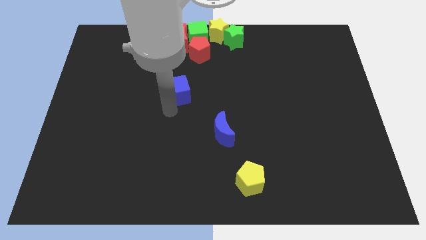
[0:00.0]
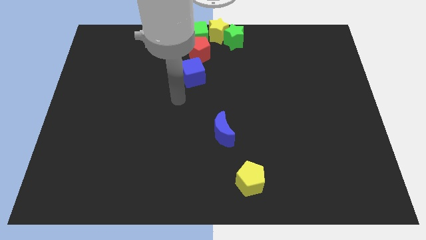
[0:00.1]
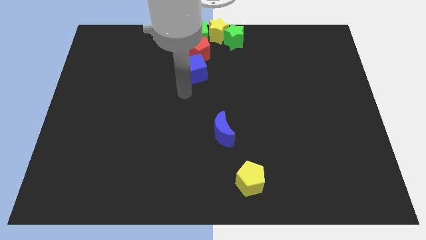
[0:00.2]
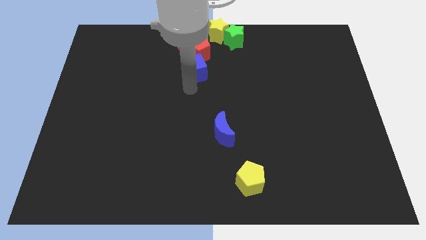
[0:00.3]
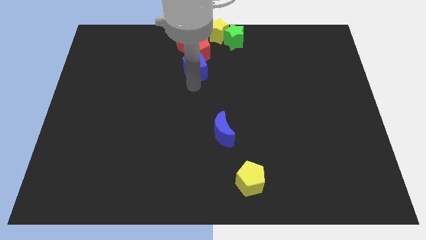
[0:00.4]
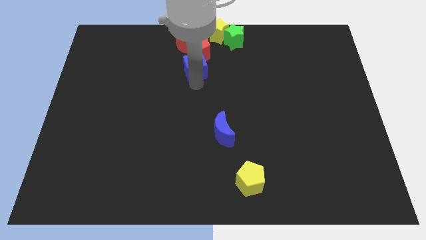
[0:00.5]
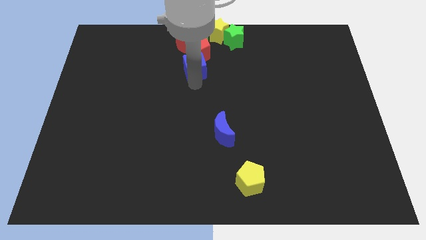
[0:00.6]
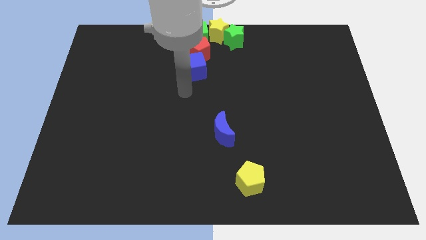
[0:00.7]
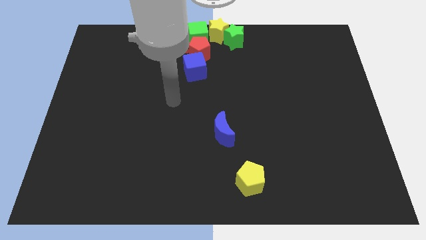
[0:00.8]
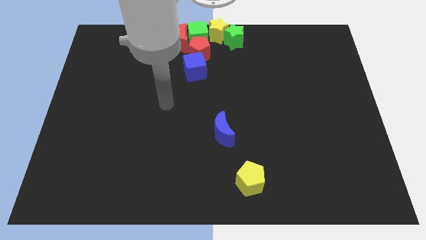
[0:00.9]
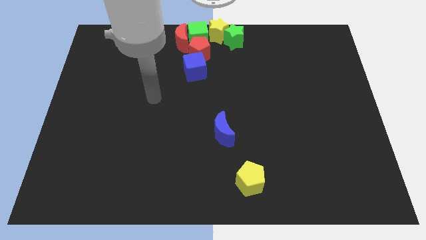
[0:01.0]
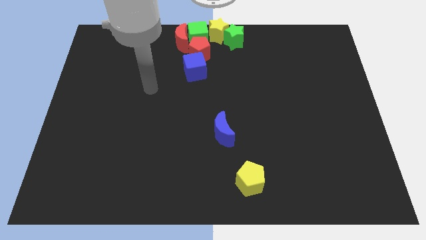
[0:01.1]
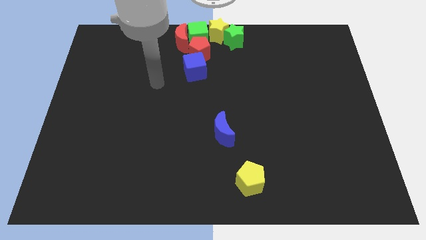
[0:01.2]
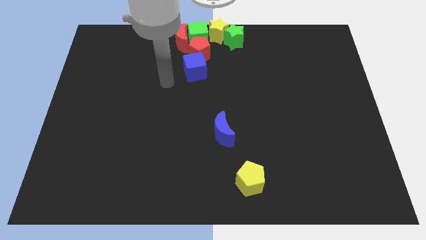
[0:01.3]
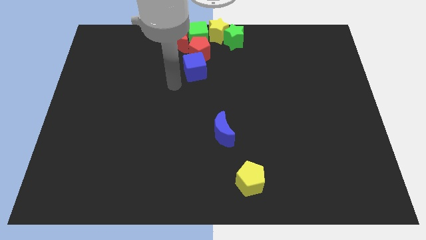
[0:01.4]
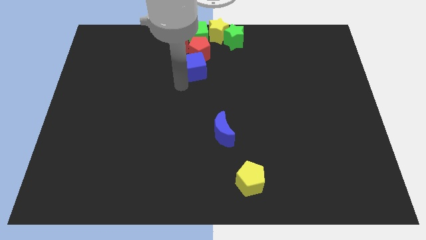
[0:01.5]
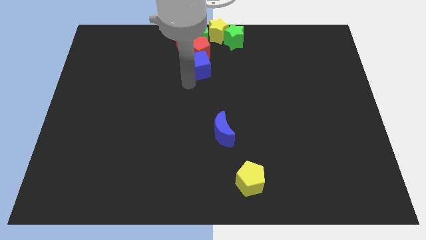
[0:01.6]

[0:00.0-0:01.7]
move the blue cube to the bottom side of the red pentagon

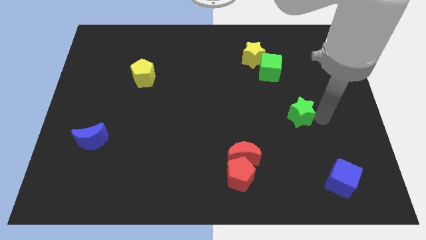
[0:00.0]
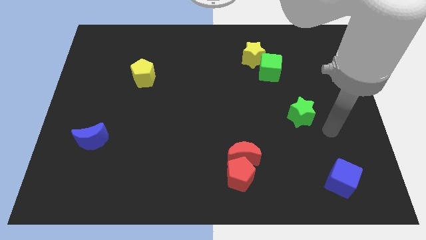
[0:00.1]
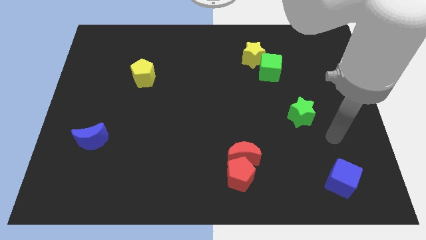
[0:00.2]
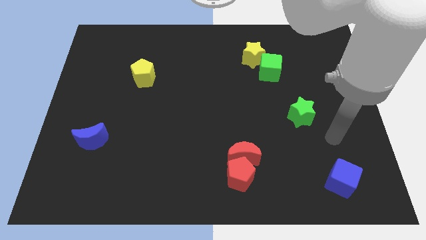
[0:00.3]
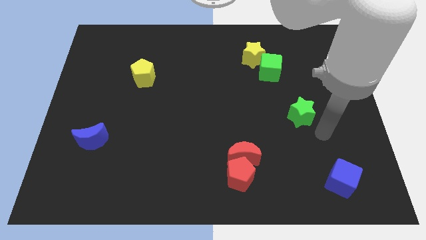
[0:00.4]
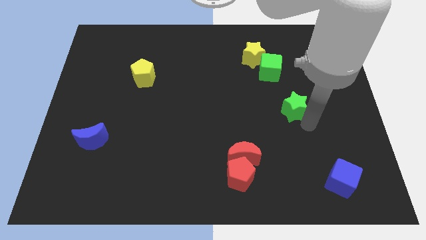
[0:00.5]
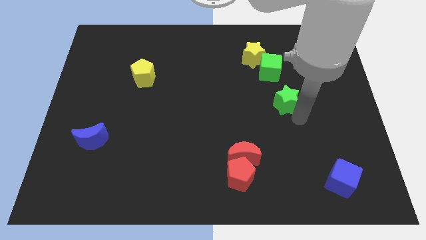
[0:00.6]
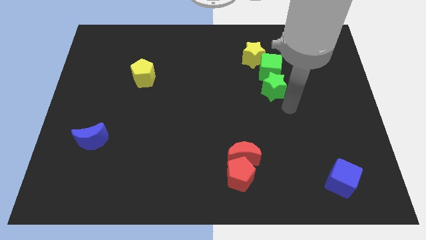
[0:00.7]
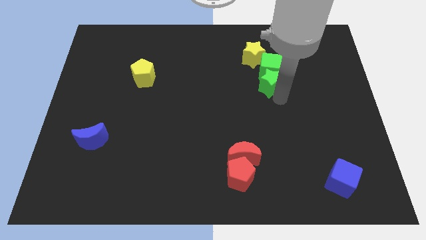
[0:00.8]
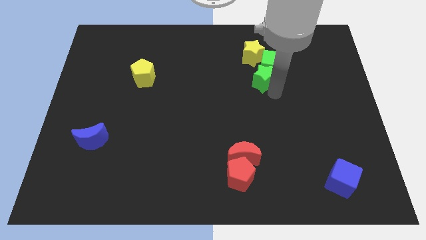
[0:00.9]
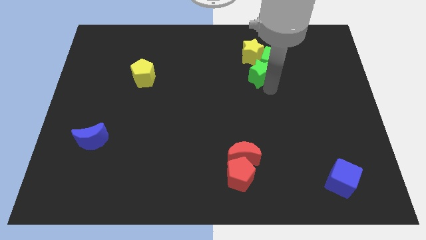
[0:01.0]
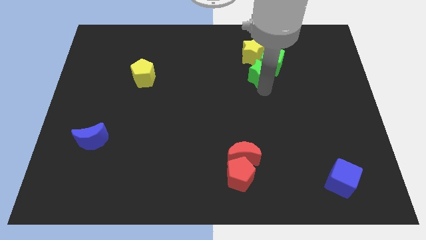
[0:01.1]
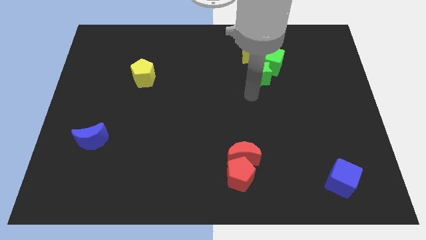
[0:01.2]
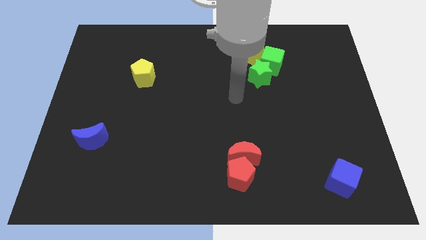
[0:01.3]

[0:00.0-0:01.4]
push the green star into the green cube and yellow star

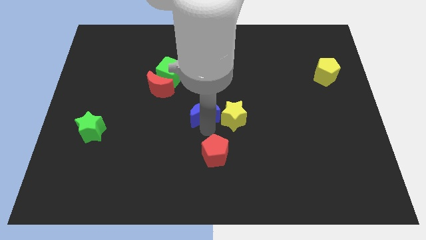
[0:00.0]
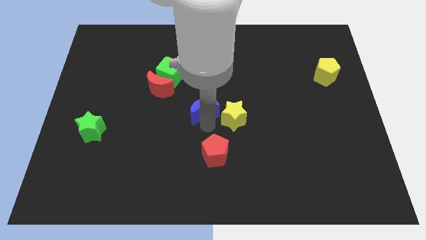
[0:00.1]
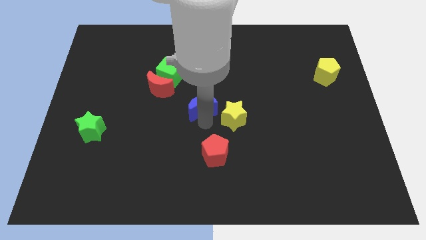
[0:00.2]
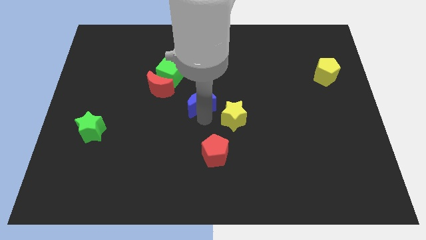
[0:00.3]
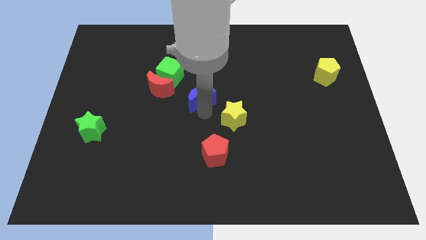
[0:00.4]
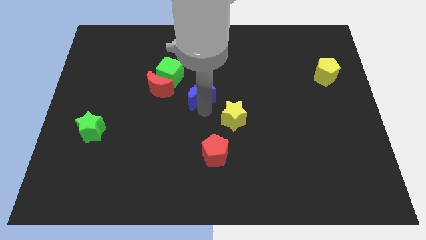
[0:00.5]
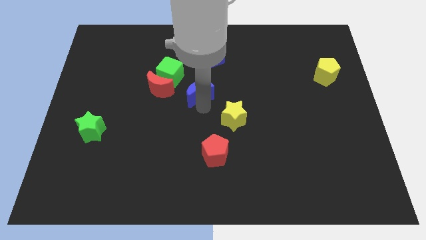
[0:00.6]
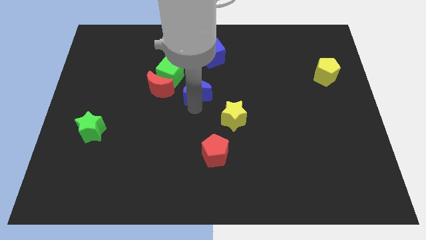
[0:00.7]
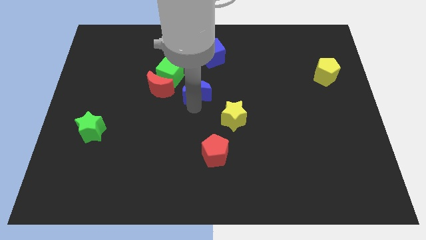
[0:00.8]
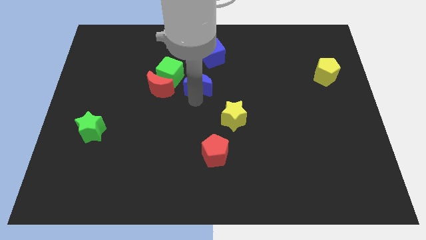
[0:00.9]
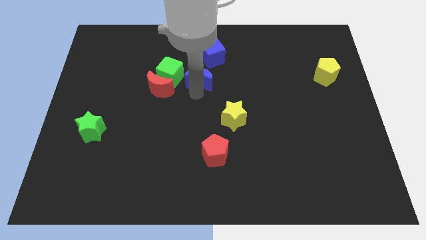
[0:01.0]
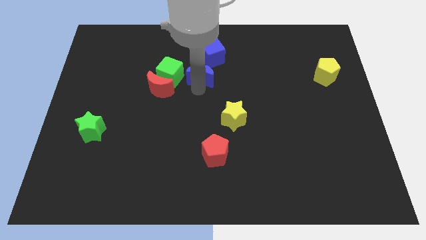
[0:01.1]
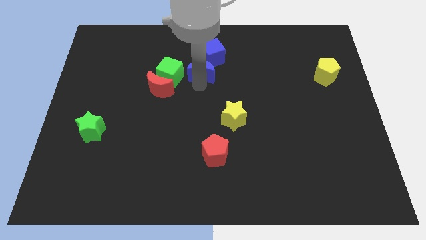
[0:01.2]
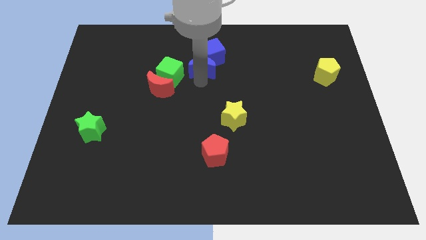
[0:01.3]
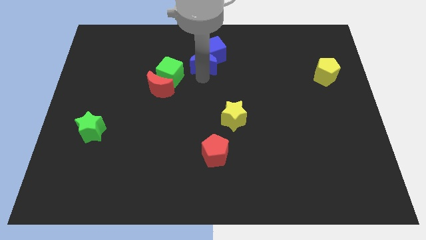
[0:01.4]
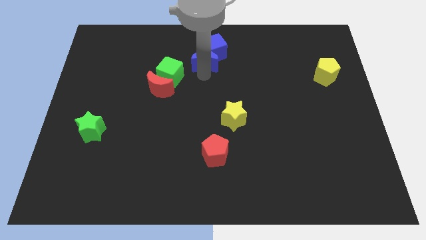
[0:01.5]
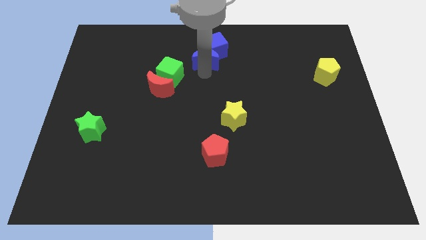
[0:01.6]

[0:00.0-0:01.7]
push the blue moon into the blue cube

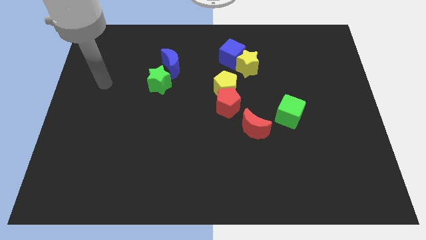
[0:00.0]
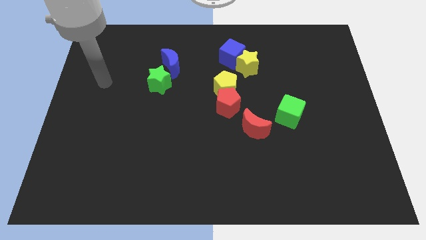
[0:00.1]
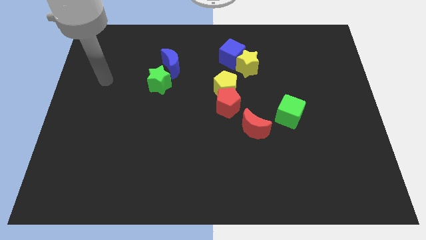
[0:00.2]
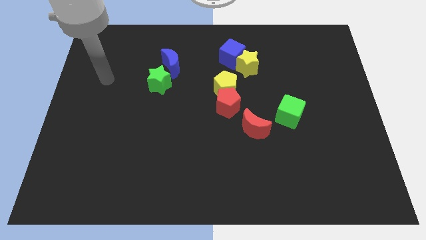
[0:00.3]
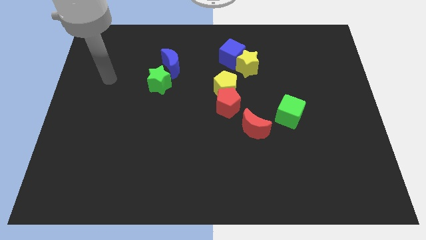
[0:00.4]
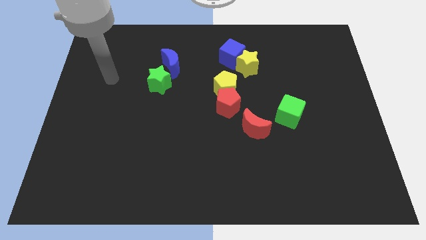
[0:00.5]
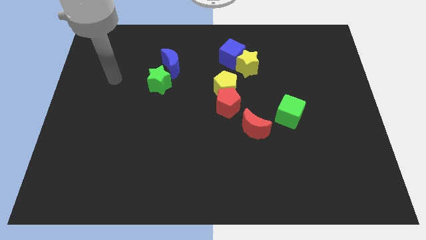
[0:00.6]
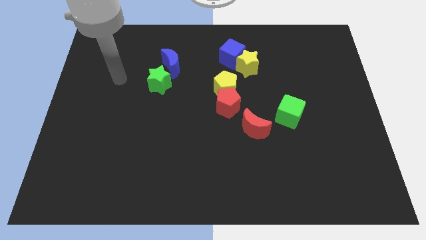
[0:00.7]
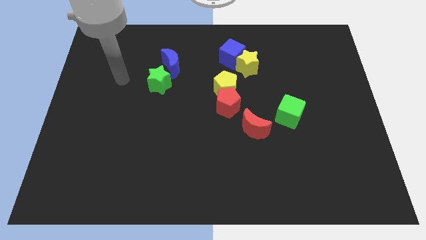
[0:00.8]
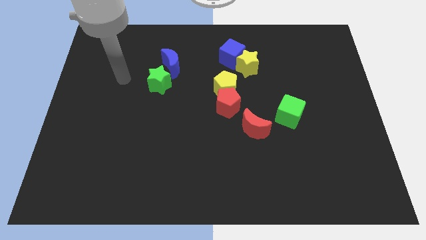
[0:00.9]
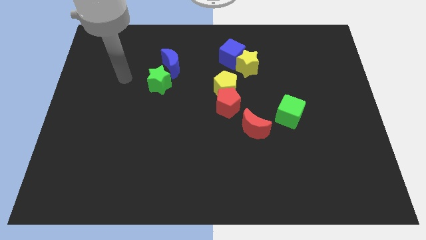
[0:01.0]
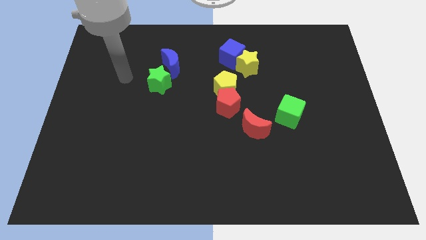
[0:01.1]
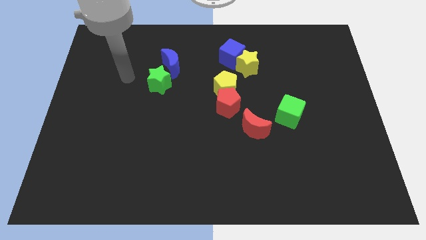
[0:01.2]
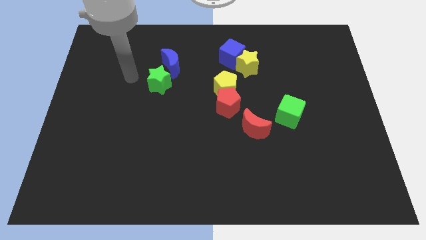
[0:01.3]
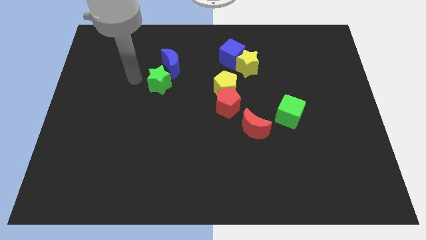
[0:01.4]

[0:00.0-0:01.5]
move your hand towards the left side of the green star

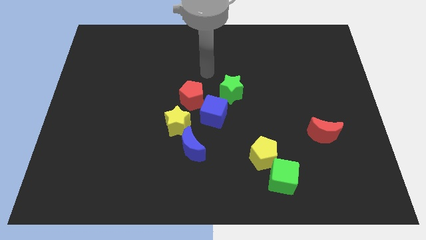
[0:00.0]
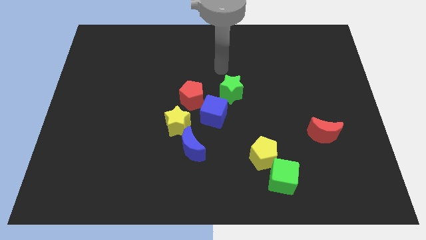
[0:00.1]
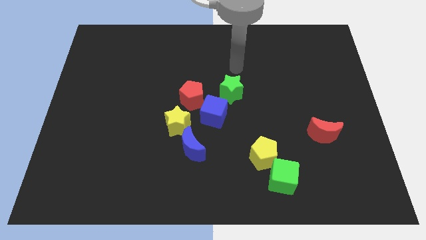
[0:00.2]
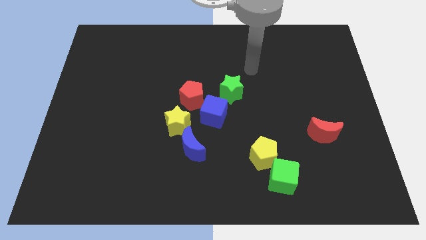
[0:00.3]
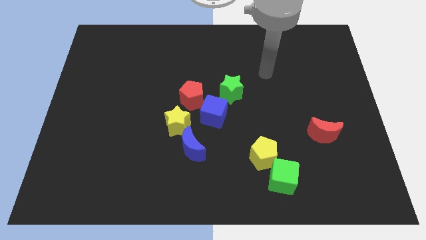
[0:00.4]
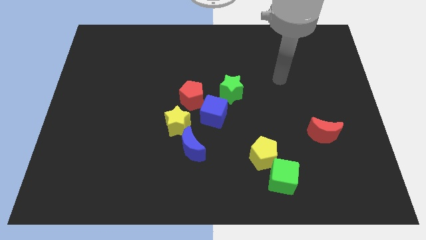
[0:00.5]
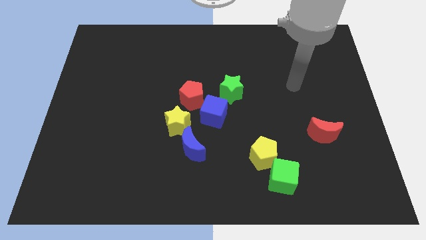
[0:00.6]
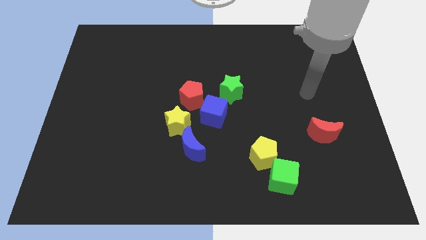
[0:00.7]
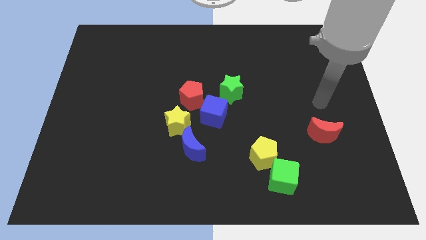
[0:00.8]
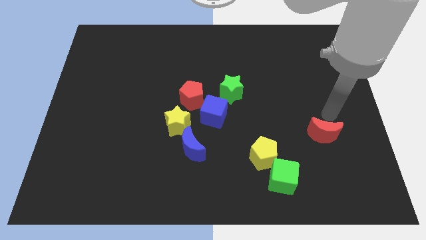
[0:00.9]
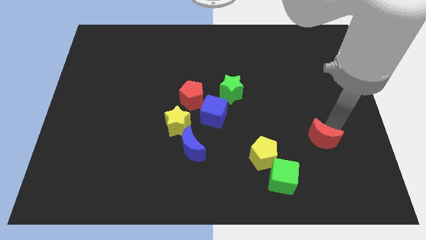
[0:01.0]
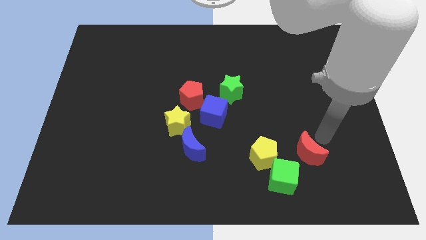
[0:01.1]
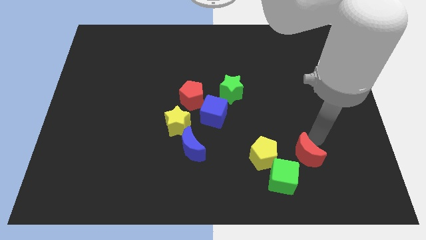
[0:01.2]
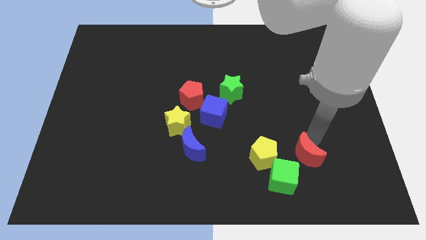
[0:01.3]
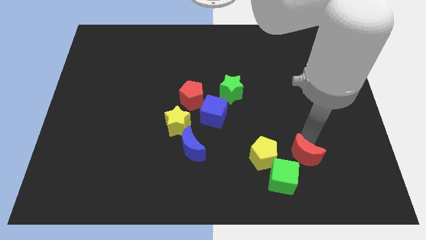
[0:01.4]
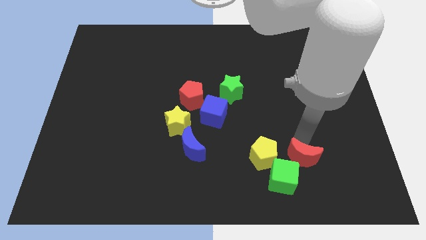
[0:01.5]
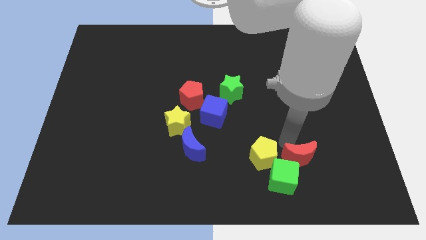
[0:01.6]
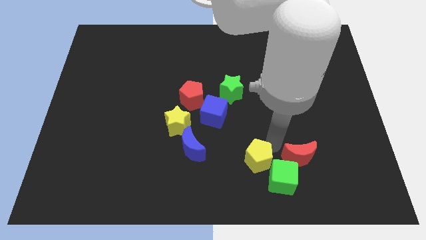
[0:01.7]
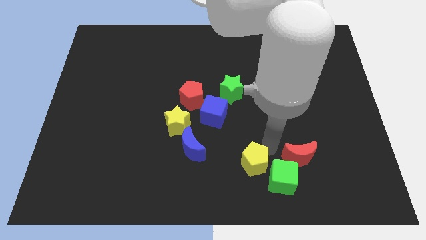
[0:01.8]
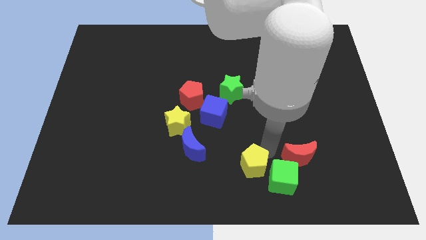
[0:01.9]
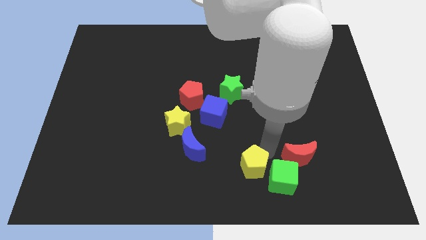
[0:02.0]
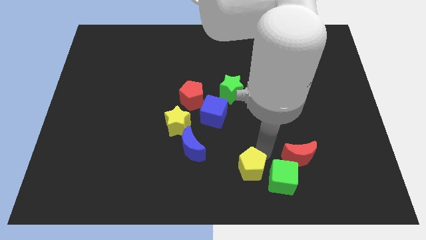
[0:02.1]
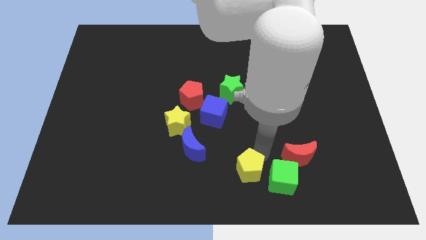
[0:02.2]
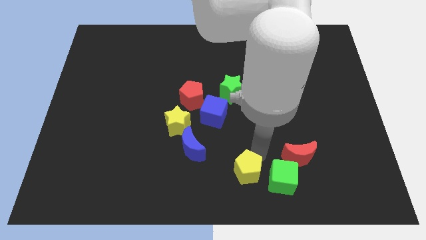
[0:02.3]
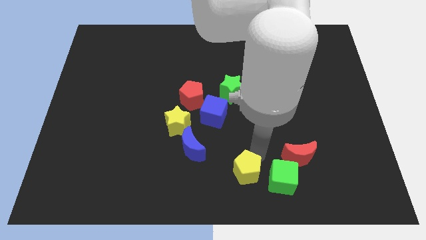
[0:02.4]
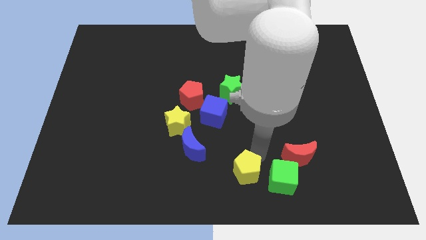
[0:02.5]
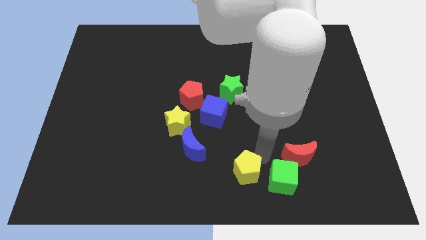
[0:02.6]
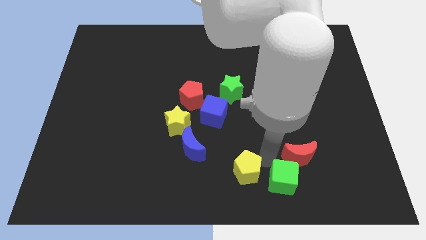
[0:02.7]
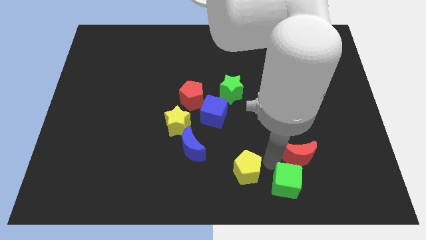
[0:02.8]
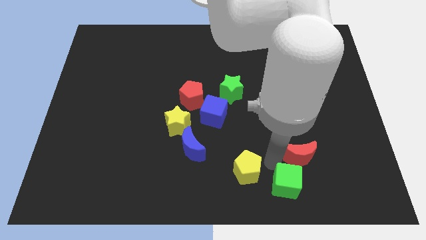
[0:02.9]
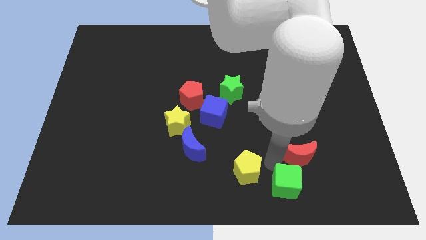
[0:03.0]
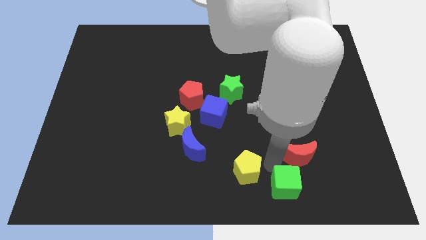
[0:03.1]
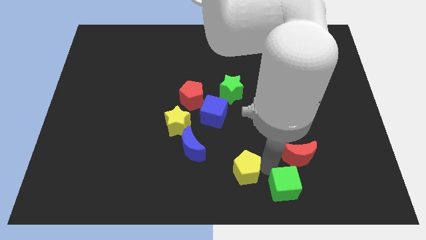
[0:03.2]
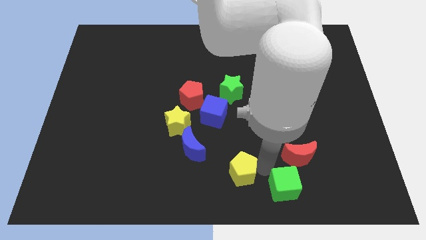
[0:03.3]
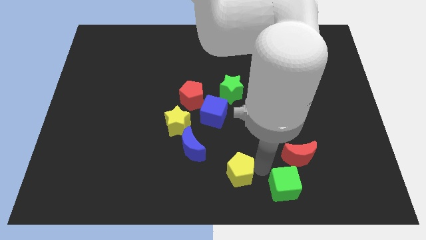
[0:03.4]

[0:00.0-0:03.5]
adjust the red moon green cube and the yellow pentagon to form a triangle
